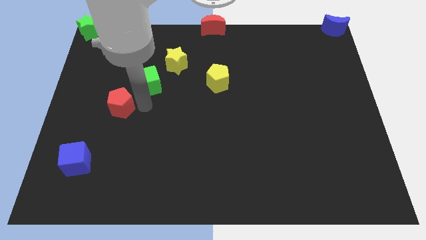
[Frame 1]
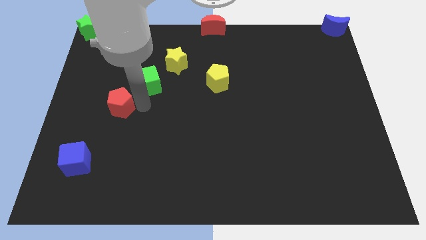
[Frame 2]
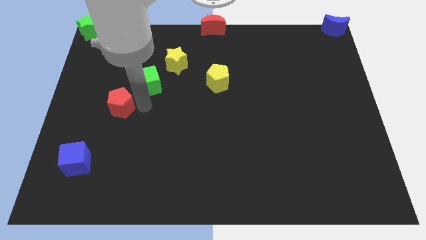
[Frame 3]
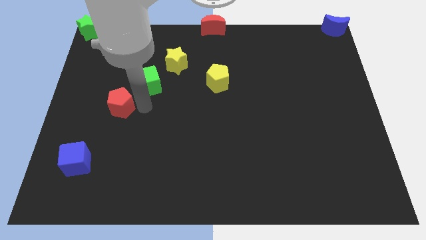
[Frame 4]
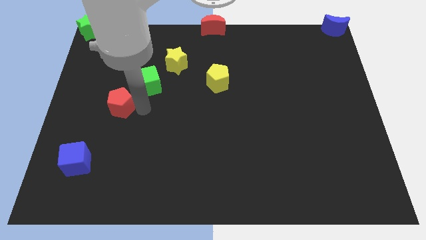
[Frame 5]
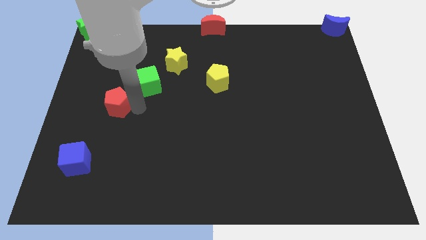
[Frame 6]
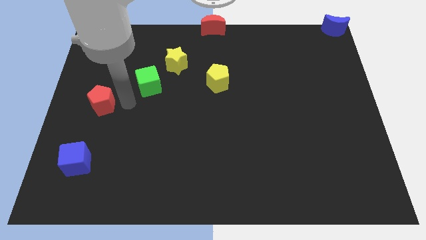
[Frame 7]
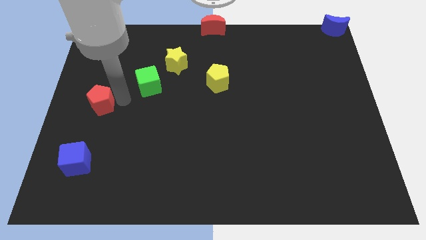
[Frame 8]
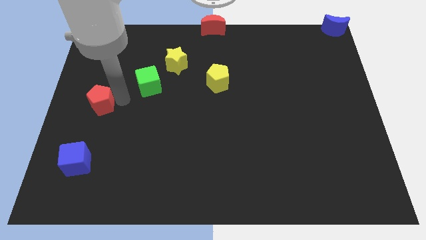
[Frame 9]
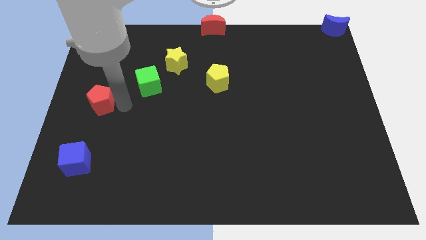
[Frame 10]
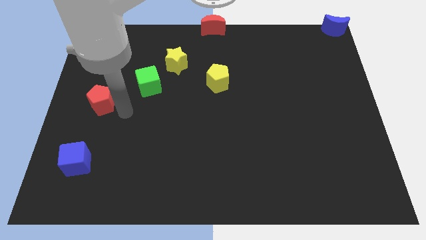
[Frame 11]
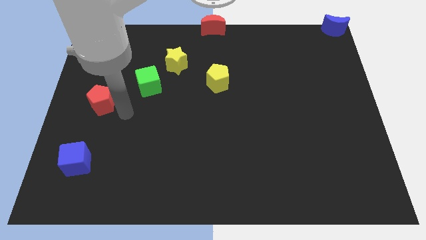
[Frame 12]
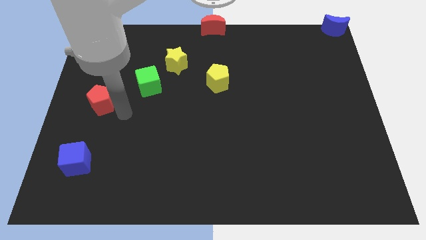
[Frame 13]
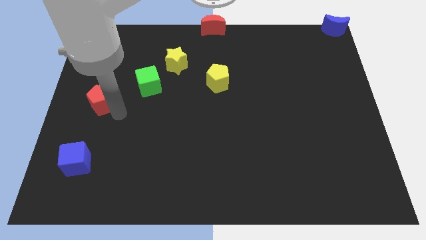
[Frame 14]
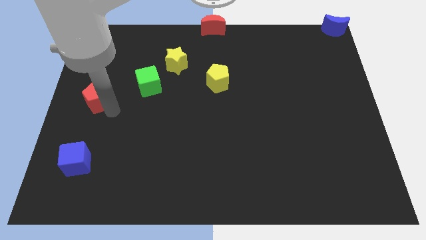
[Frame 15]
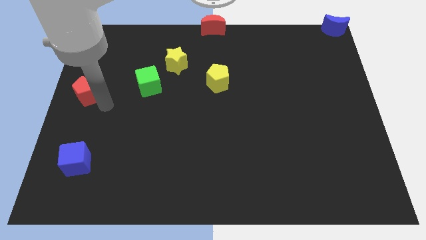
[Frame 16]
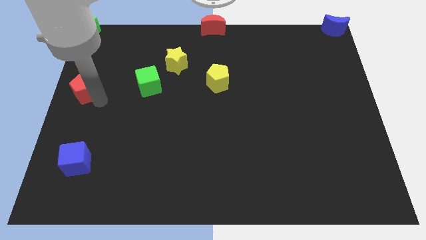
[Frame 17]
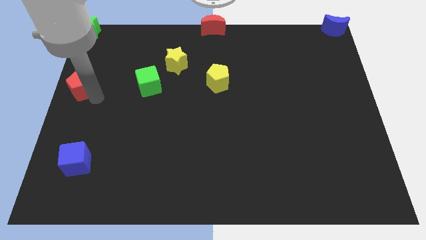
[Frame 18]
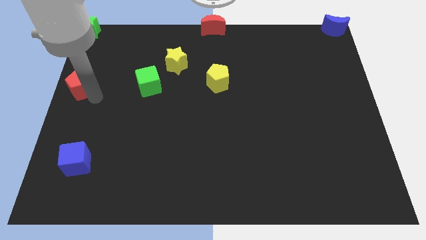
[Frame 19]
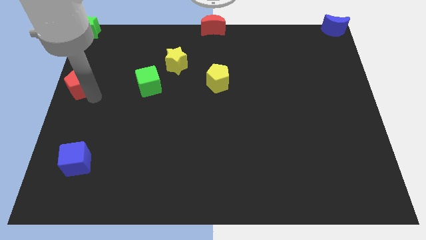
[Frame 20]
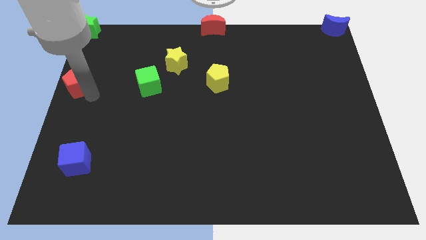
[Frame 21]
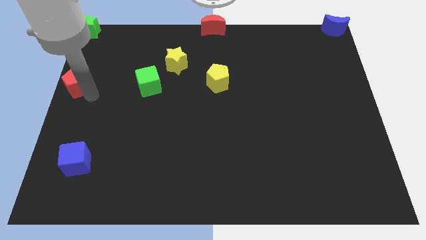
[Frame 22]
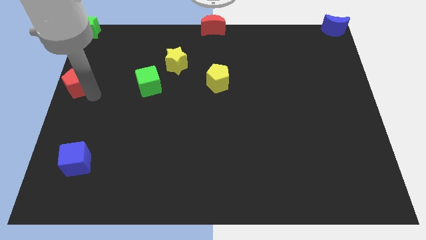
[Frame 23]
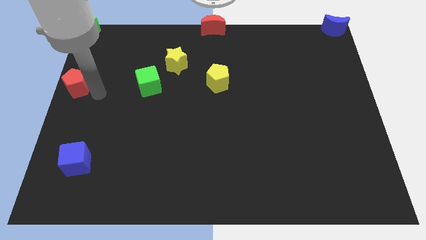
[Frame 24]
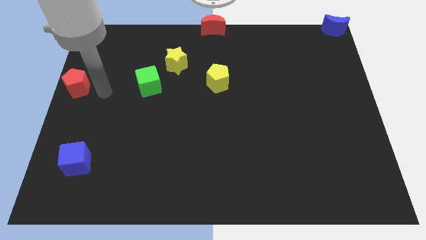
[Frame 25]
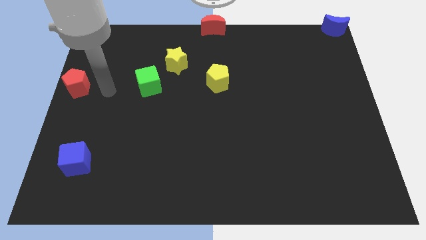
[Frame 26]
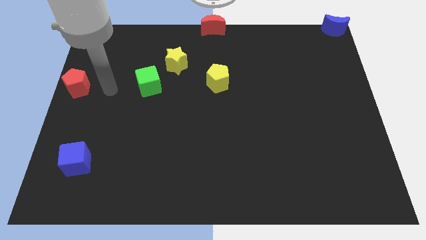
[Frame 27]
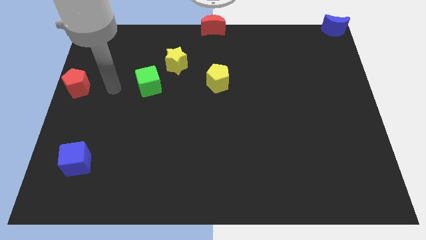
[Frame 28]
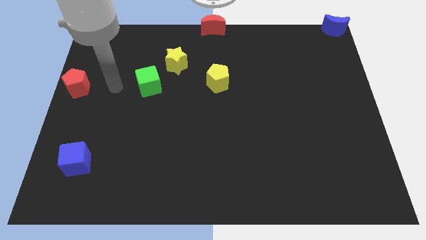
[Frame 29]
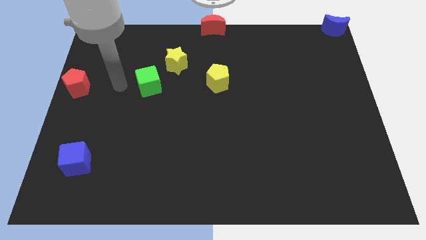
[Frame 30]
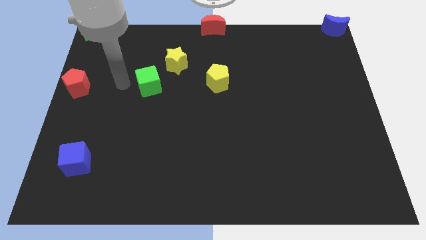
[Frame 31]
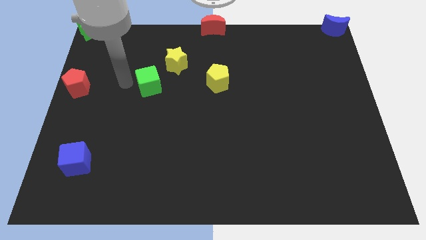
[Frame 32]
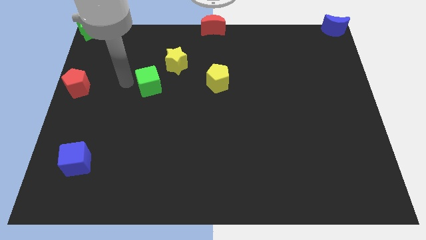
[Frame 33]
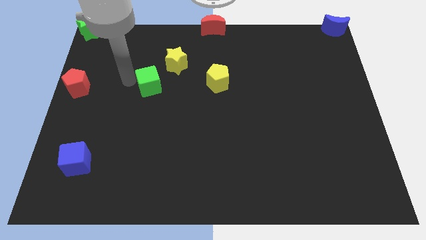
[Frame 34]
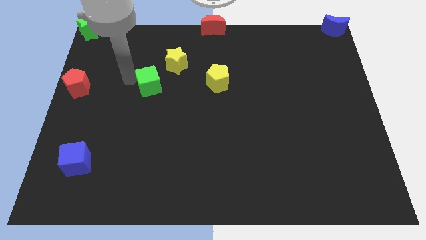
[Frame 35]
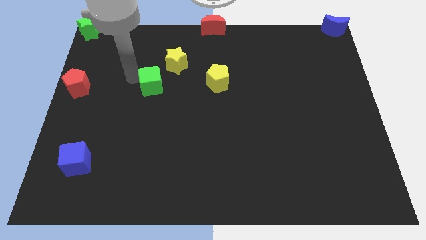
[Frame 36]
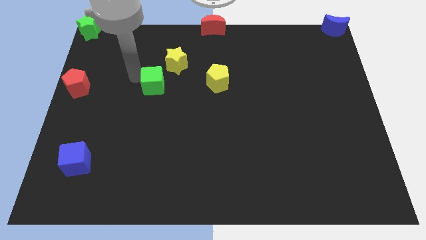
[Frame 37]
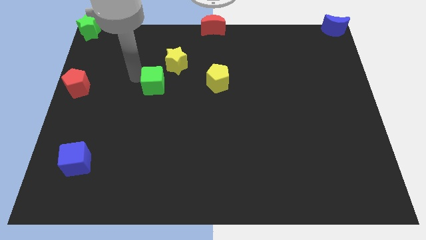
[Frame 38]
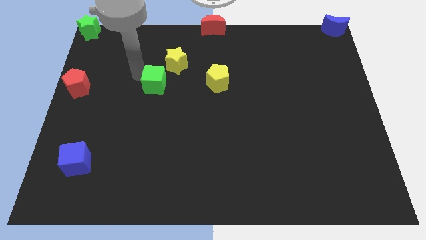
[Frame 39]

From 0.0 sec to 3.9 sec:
place the red pentagon at the left center of the board

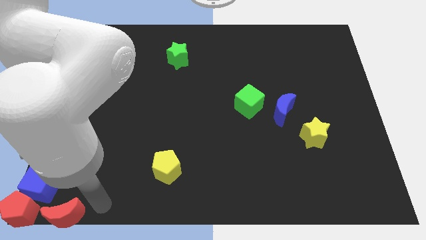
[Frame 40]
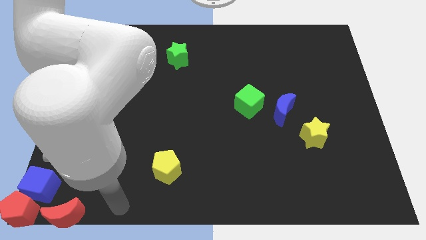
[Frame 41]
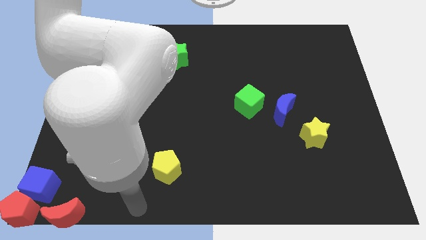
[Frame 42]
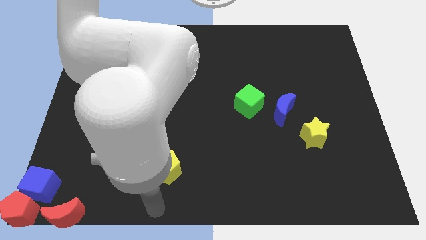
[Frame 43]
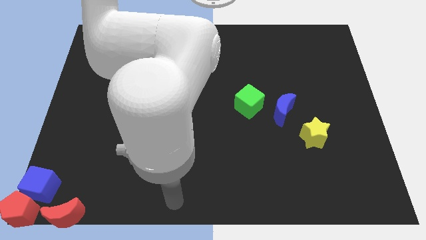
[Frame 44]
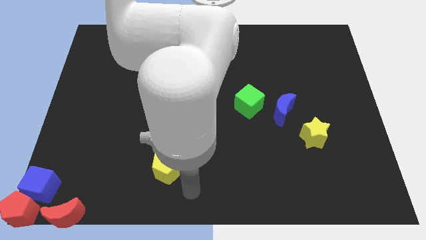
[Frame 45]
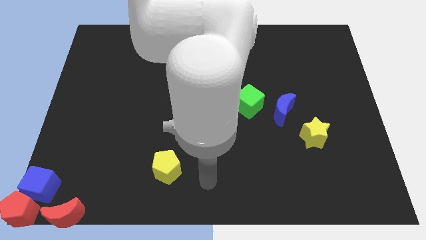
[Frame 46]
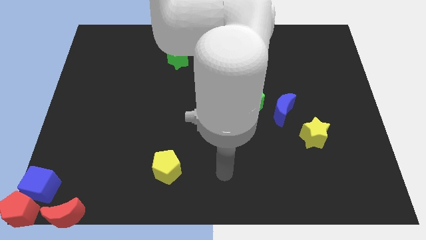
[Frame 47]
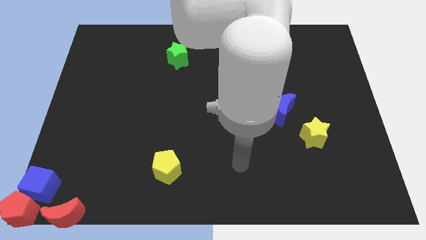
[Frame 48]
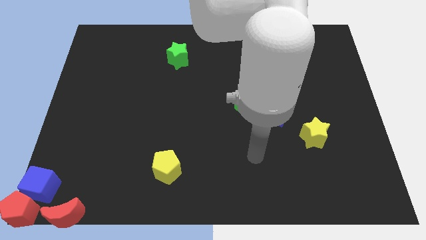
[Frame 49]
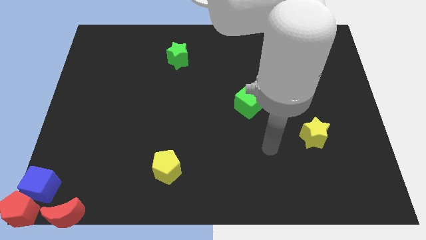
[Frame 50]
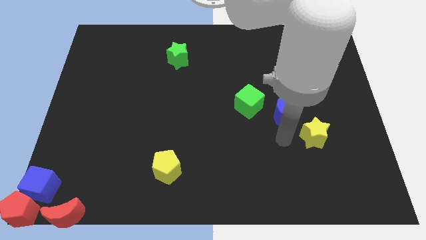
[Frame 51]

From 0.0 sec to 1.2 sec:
move arm to the left of yellow star

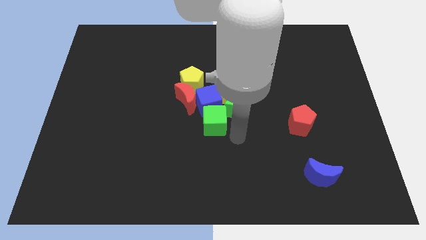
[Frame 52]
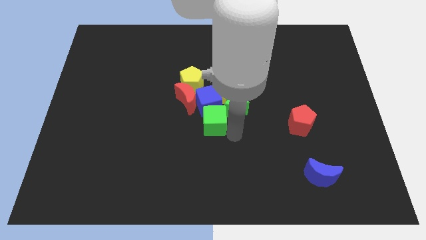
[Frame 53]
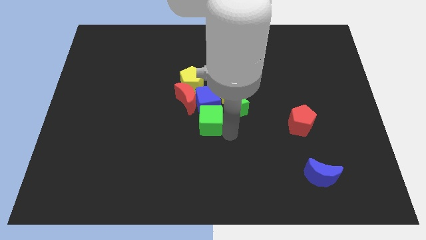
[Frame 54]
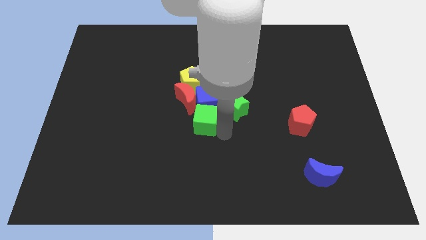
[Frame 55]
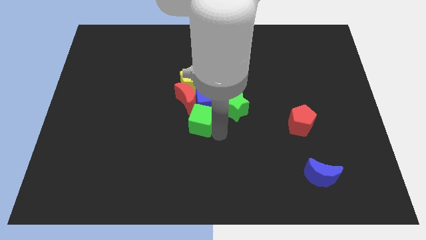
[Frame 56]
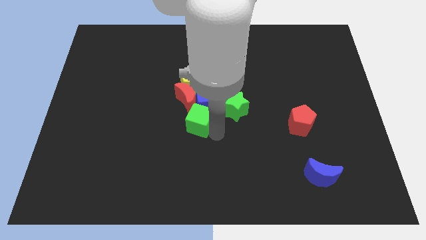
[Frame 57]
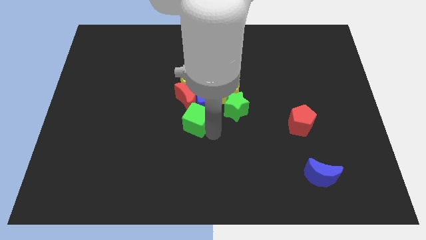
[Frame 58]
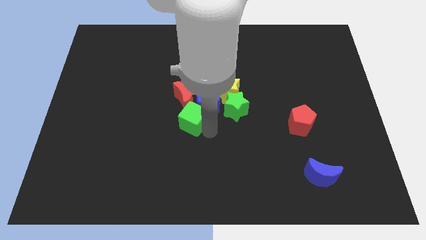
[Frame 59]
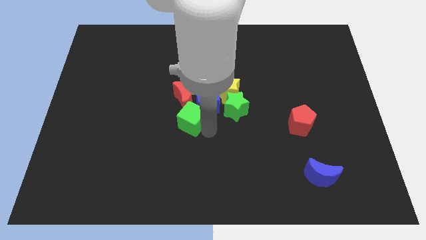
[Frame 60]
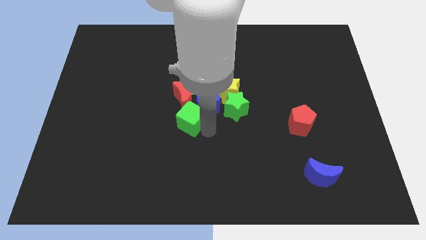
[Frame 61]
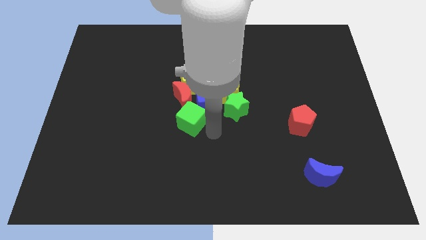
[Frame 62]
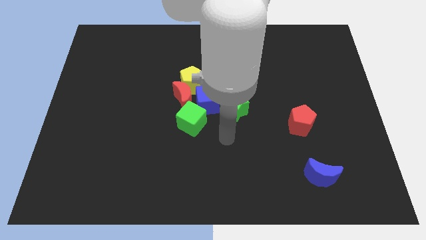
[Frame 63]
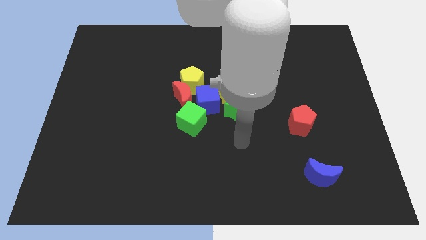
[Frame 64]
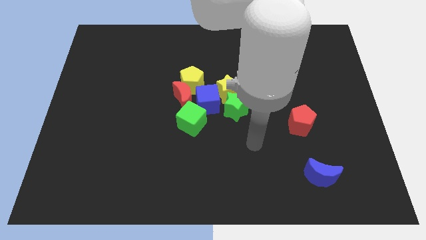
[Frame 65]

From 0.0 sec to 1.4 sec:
move the green cube to the bottom left of the blue cube

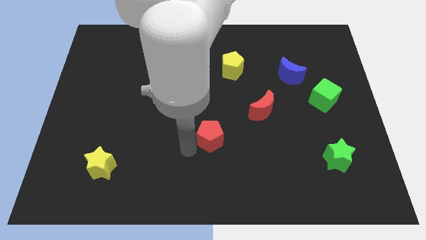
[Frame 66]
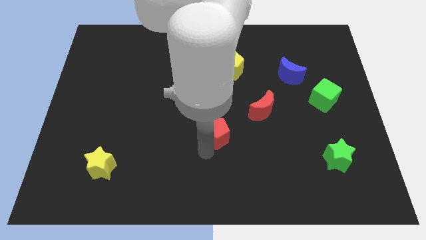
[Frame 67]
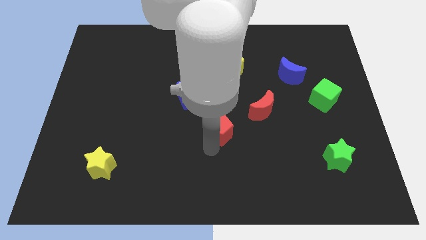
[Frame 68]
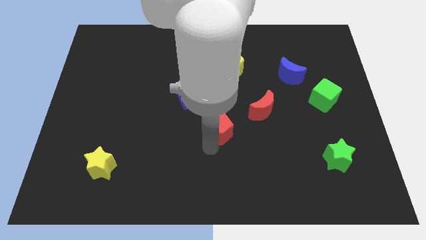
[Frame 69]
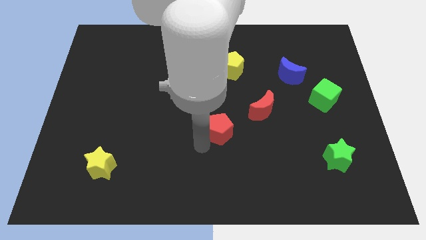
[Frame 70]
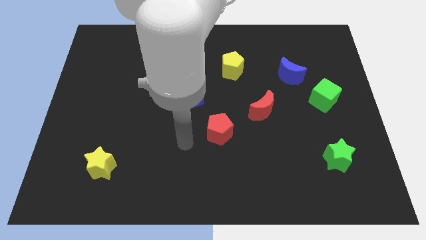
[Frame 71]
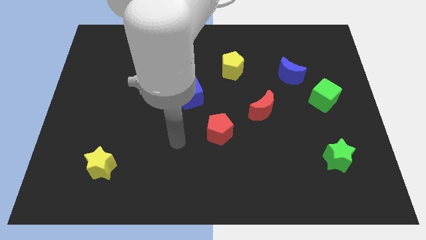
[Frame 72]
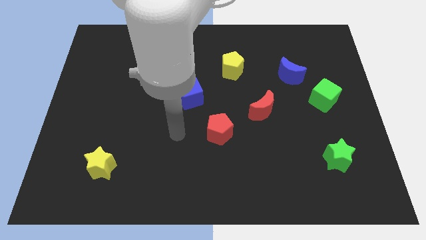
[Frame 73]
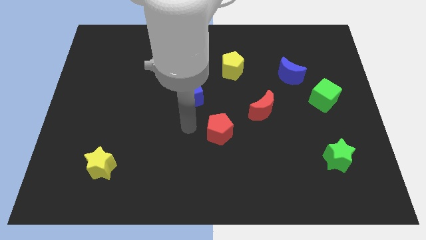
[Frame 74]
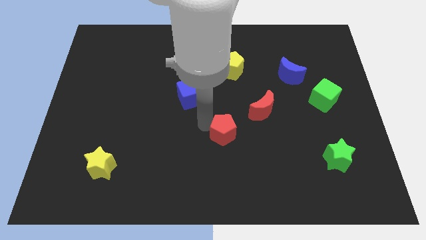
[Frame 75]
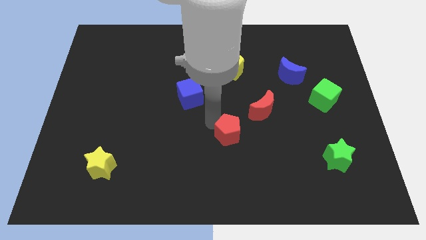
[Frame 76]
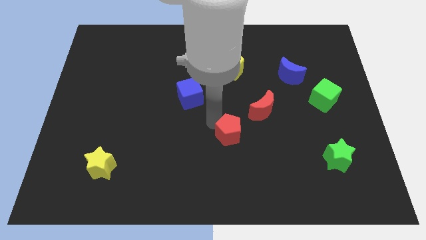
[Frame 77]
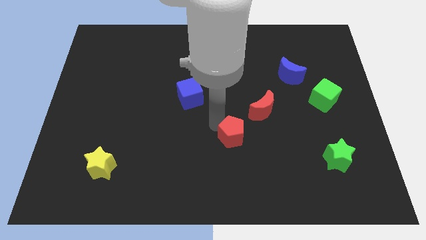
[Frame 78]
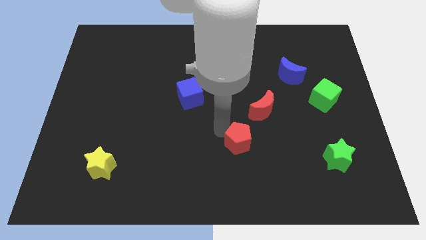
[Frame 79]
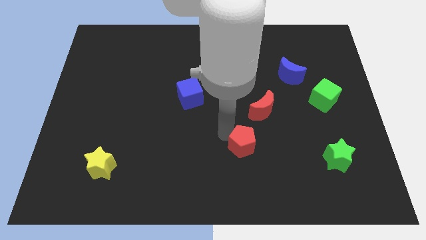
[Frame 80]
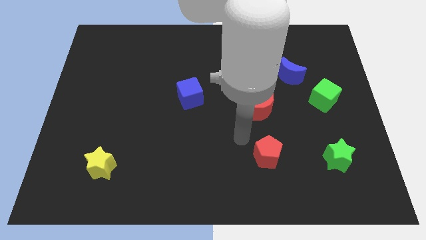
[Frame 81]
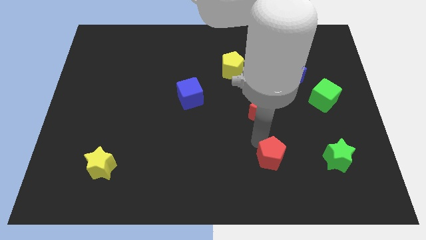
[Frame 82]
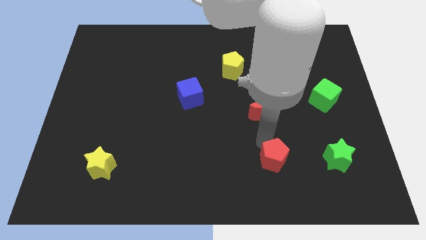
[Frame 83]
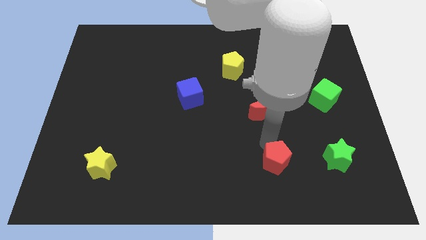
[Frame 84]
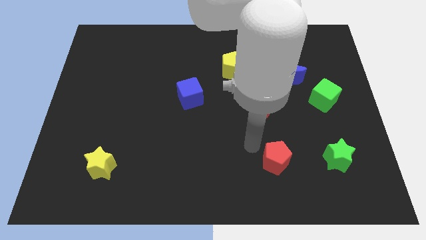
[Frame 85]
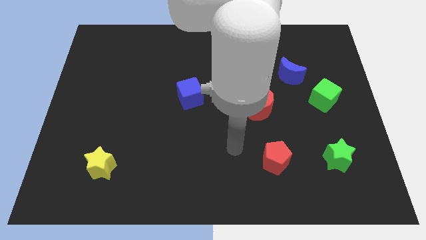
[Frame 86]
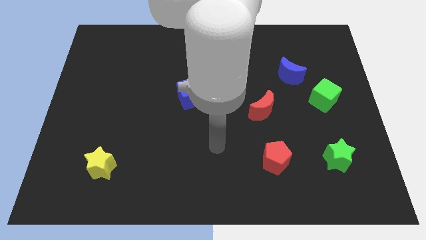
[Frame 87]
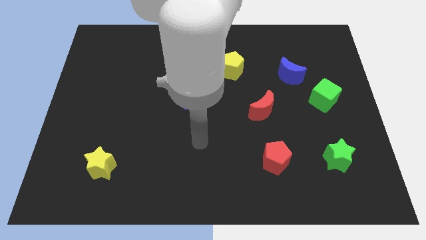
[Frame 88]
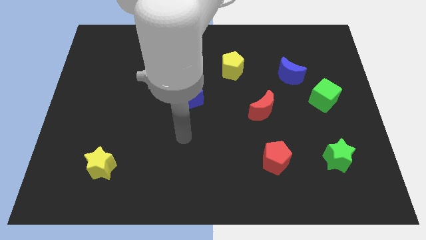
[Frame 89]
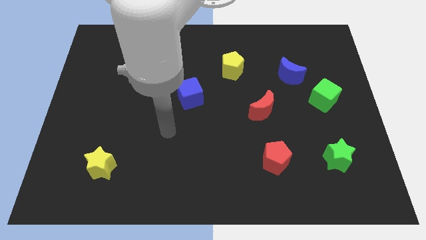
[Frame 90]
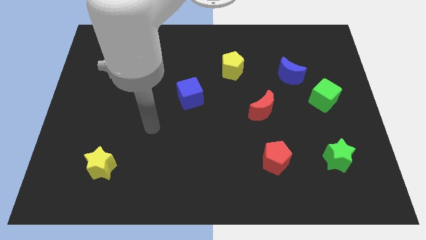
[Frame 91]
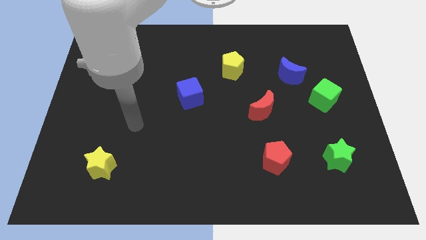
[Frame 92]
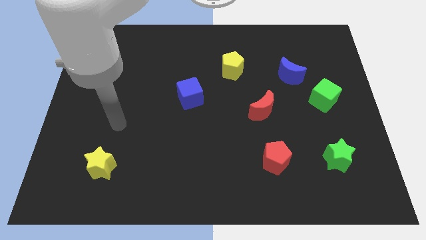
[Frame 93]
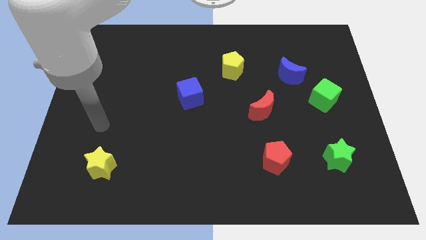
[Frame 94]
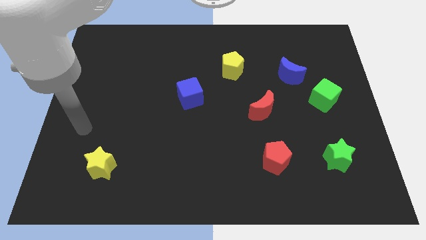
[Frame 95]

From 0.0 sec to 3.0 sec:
put the red pentagon vertically below the red moon
